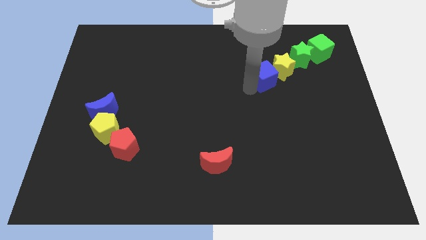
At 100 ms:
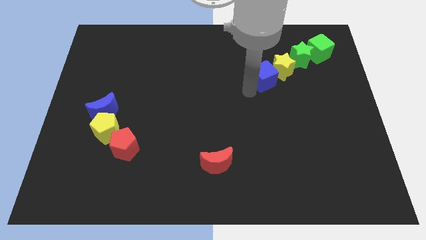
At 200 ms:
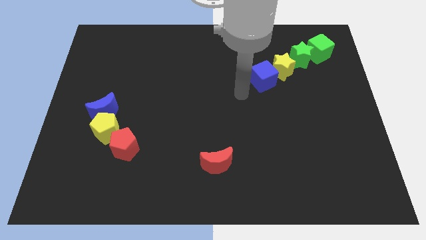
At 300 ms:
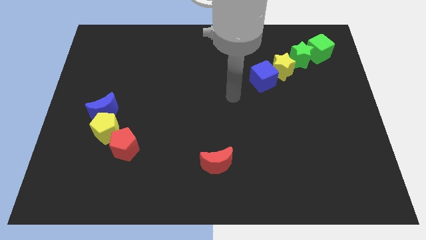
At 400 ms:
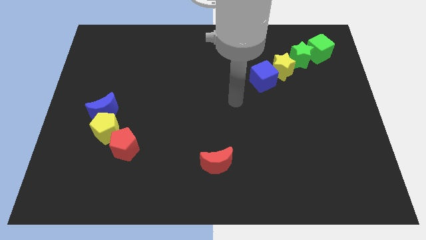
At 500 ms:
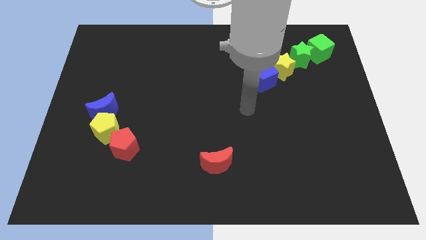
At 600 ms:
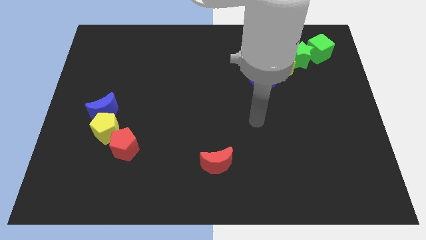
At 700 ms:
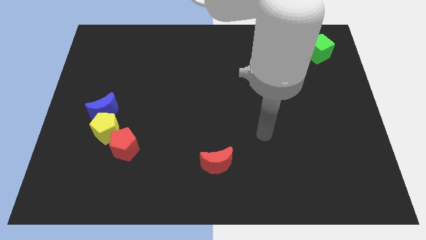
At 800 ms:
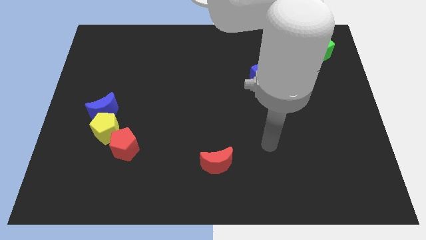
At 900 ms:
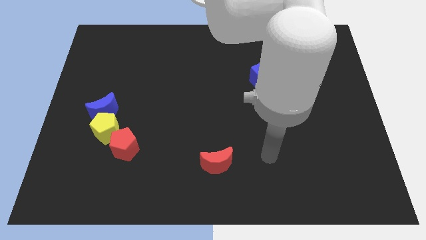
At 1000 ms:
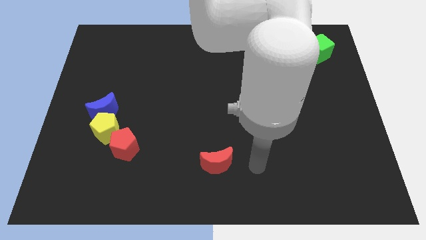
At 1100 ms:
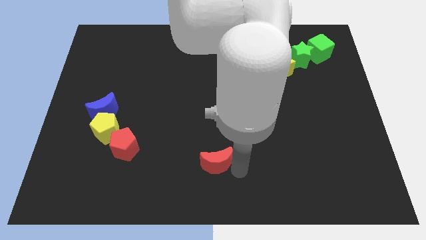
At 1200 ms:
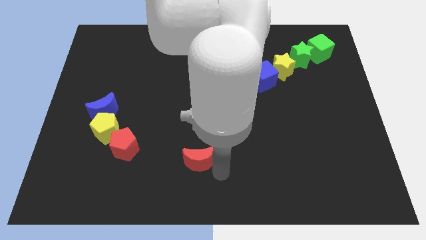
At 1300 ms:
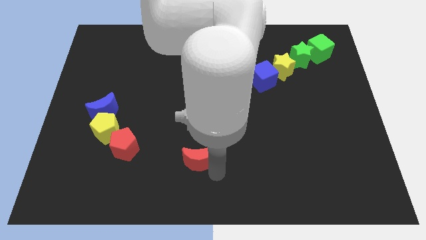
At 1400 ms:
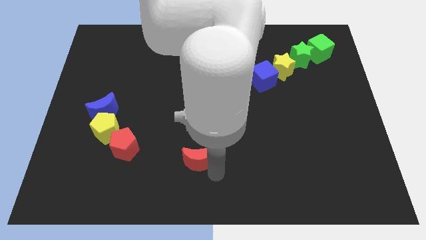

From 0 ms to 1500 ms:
move the arm towards the red crescent

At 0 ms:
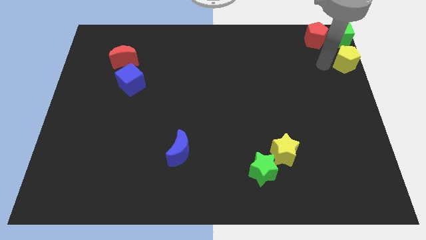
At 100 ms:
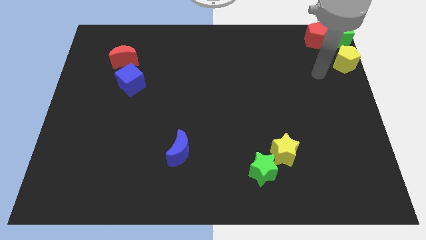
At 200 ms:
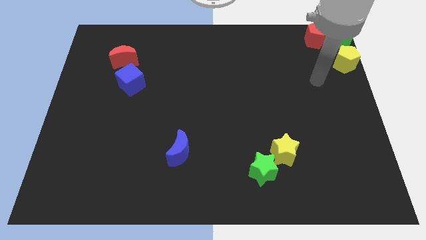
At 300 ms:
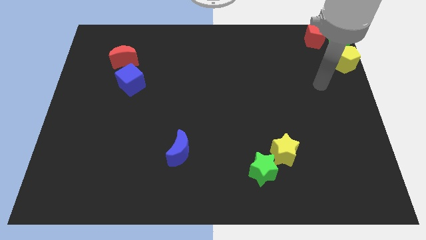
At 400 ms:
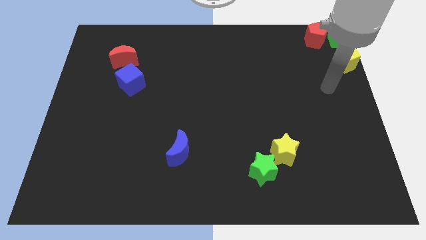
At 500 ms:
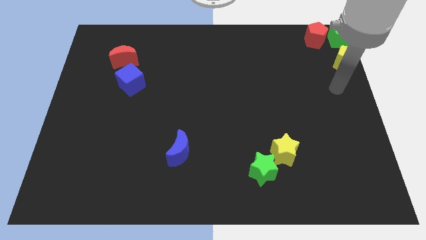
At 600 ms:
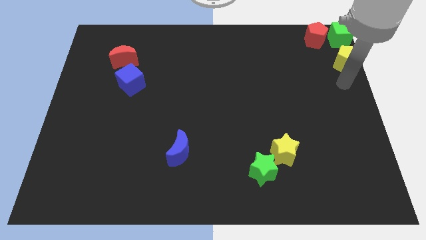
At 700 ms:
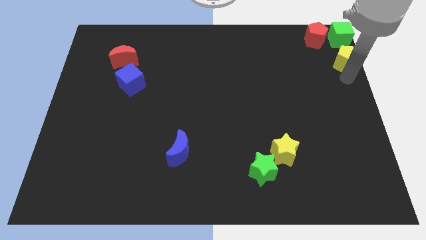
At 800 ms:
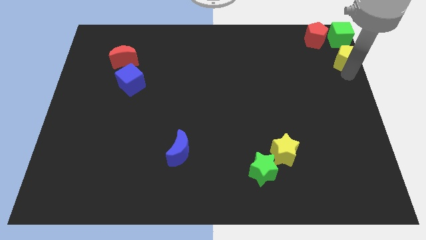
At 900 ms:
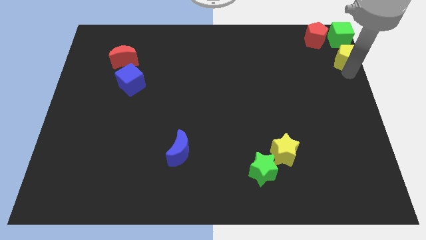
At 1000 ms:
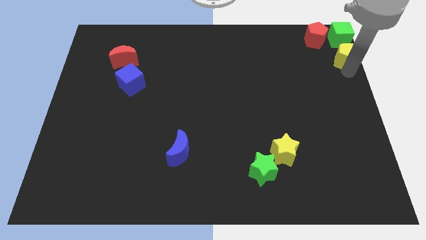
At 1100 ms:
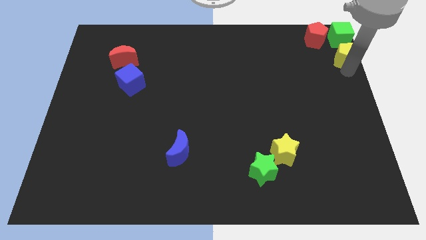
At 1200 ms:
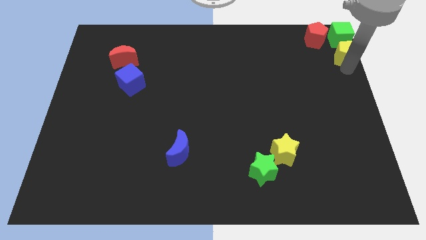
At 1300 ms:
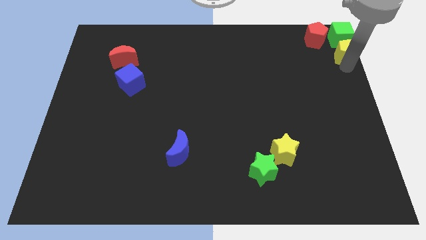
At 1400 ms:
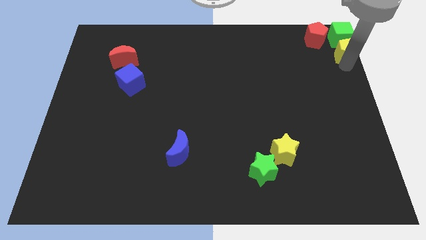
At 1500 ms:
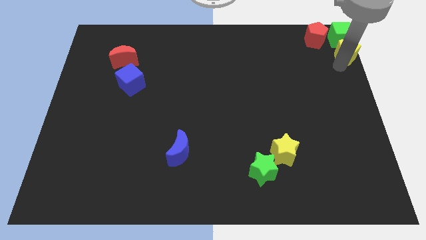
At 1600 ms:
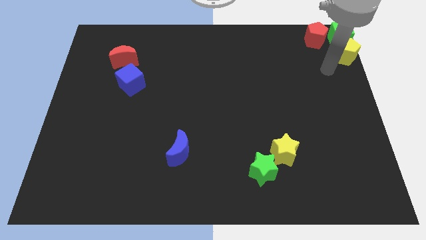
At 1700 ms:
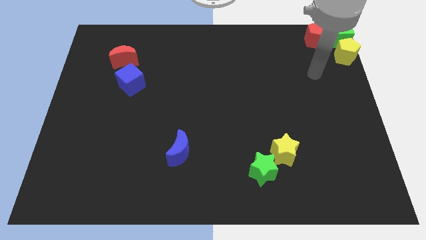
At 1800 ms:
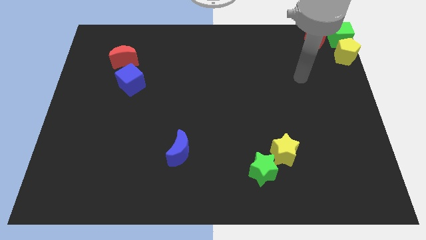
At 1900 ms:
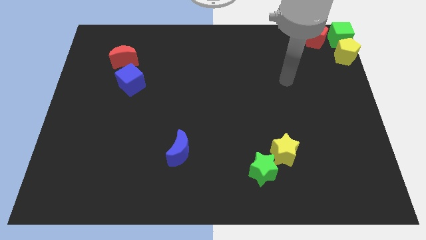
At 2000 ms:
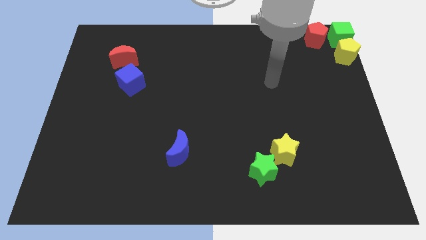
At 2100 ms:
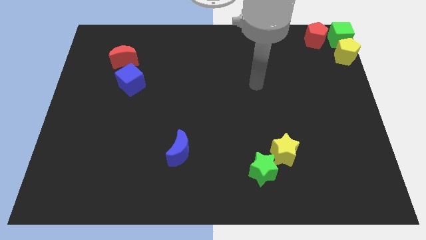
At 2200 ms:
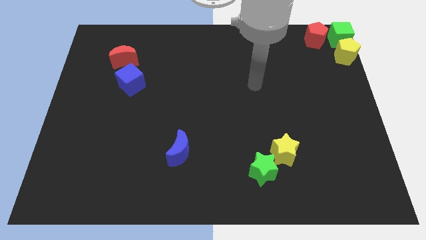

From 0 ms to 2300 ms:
push the yellow block close to the green block

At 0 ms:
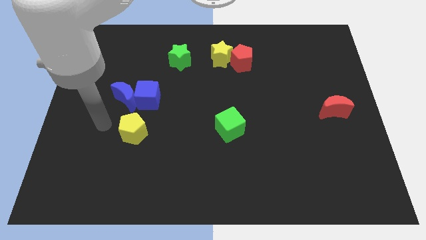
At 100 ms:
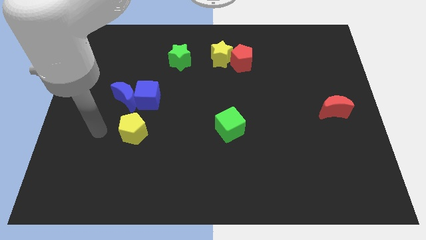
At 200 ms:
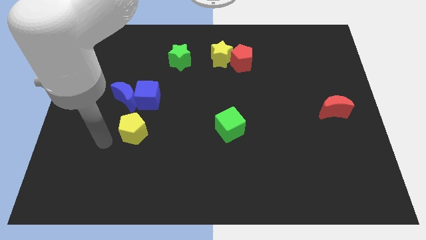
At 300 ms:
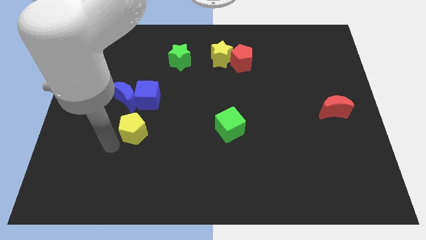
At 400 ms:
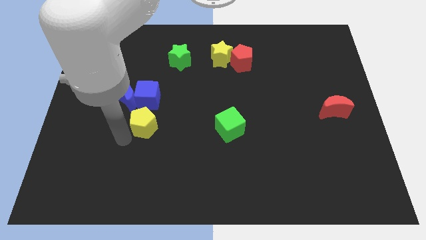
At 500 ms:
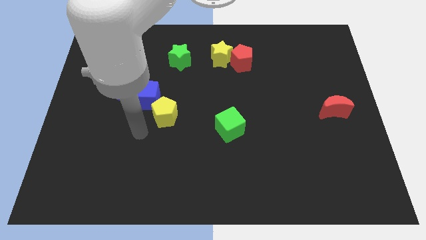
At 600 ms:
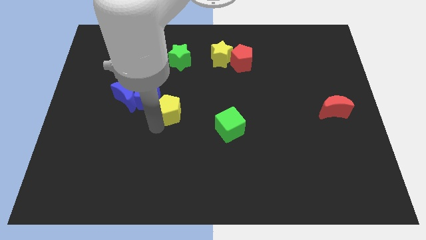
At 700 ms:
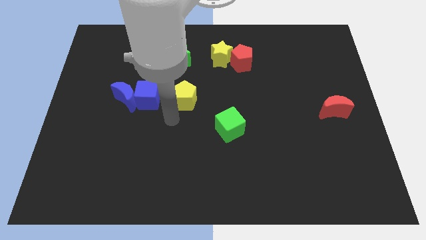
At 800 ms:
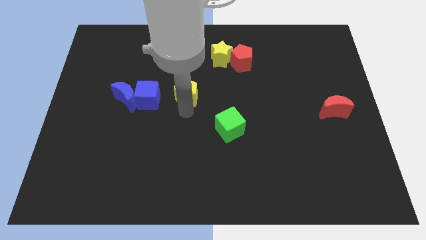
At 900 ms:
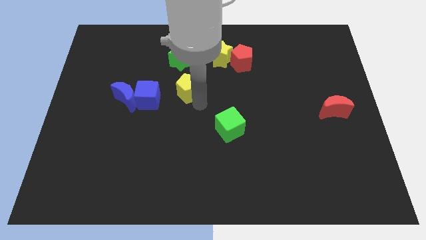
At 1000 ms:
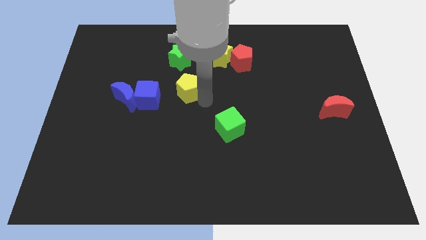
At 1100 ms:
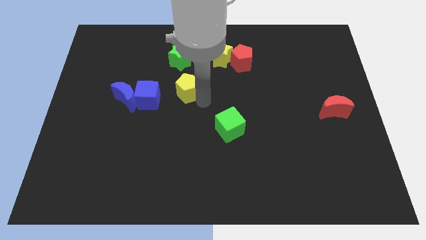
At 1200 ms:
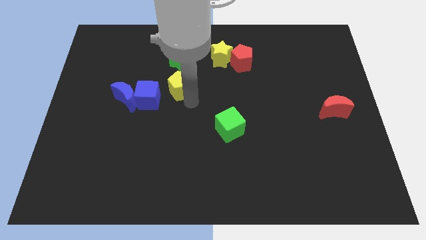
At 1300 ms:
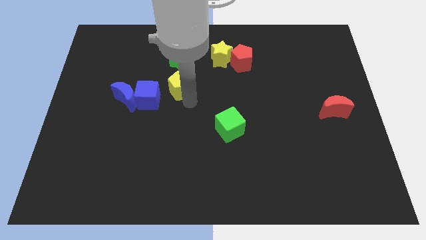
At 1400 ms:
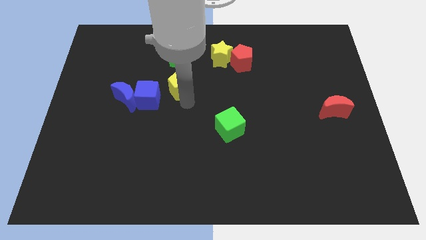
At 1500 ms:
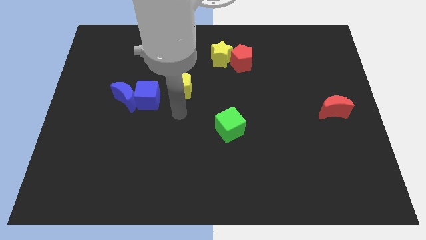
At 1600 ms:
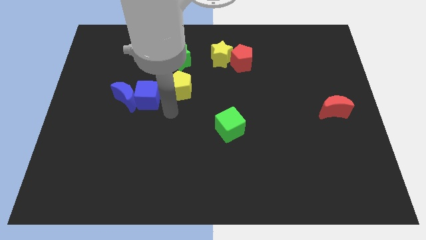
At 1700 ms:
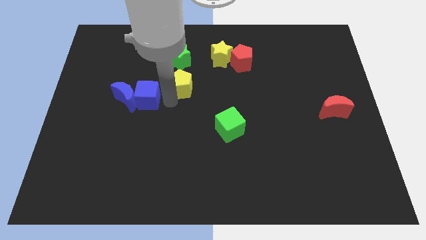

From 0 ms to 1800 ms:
push the yellow pentagon underneath the green star

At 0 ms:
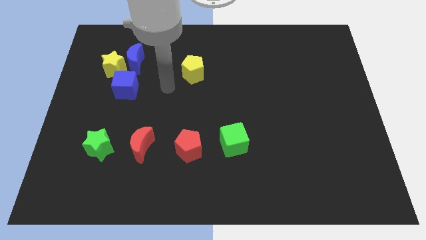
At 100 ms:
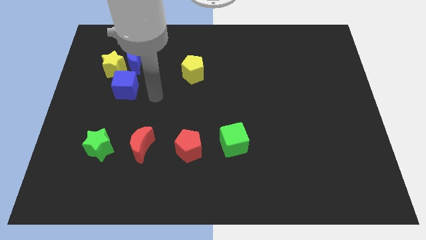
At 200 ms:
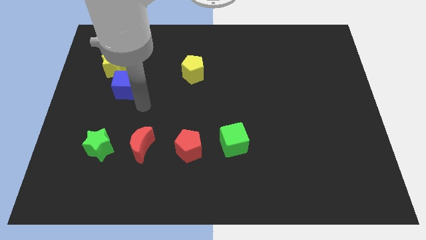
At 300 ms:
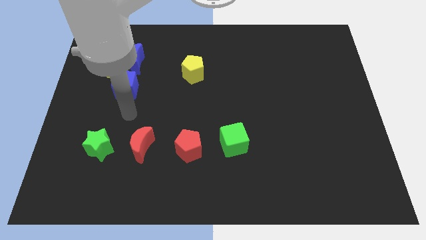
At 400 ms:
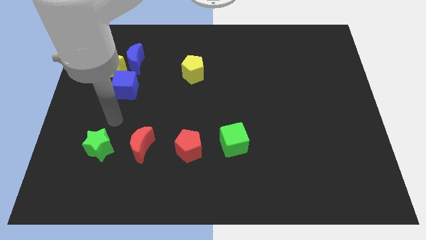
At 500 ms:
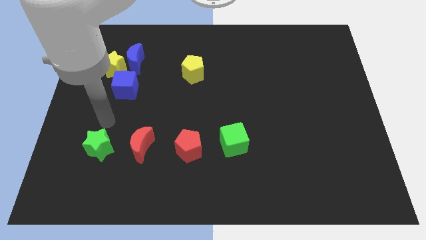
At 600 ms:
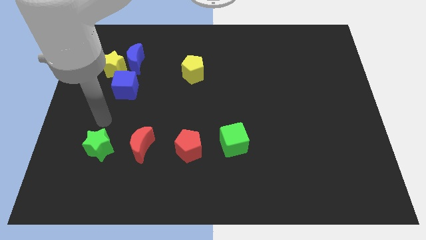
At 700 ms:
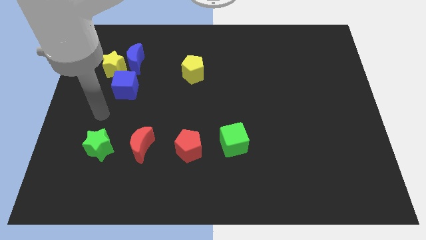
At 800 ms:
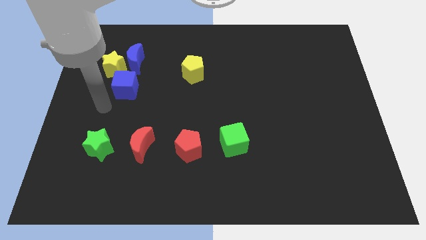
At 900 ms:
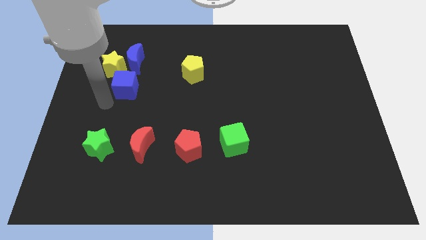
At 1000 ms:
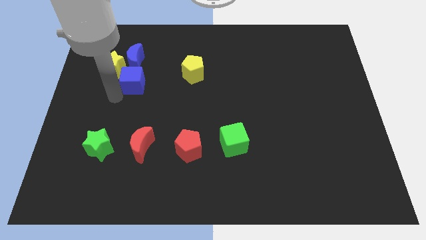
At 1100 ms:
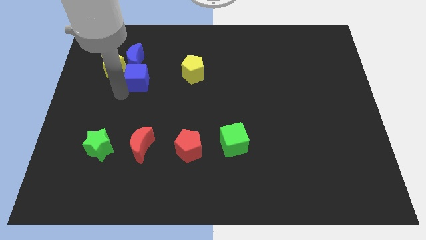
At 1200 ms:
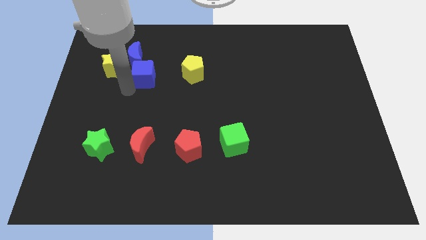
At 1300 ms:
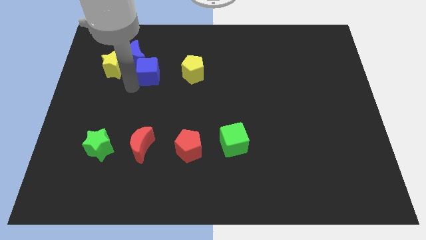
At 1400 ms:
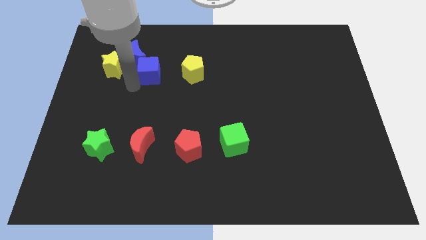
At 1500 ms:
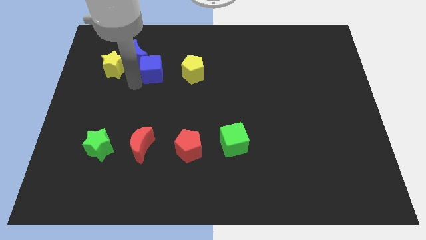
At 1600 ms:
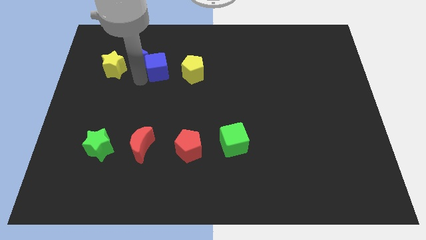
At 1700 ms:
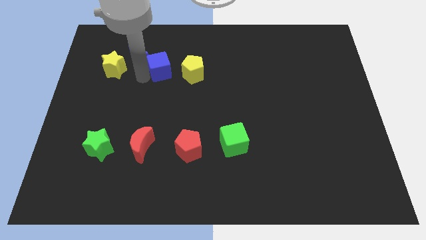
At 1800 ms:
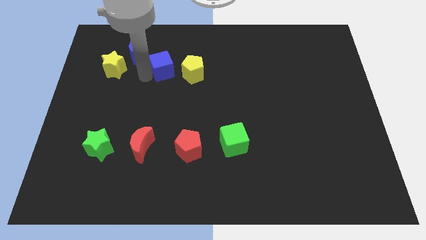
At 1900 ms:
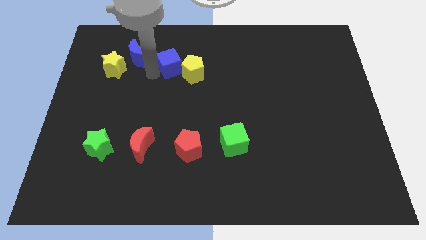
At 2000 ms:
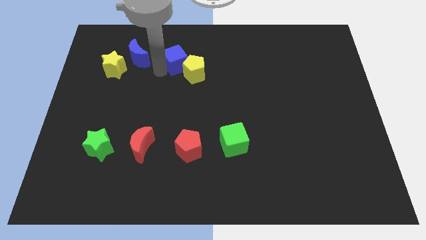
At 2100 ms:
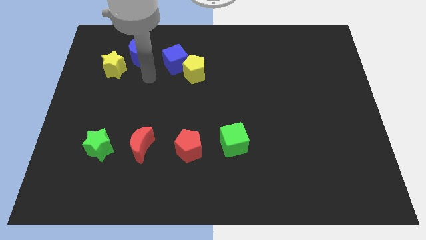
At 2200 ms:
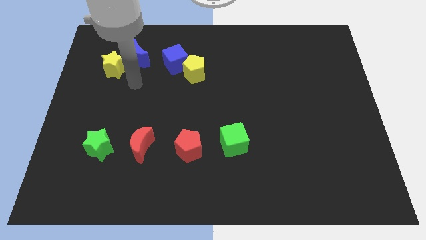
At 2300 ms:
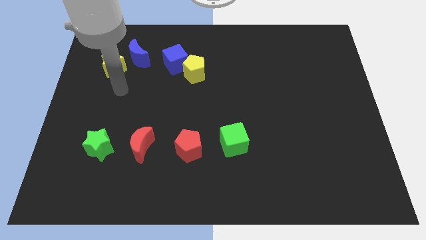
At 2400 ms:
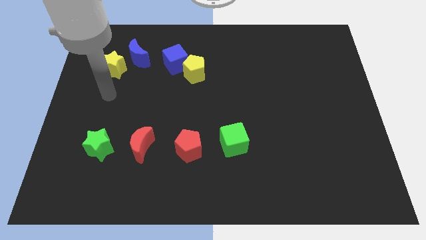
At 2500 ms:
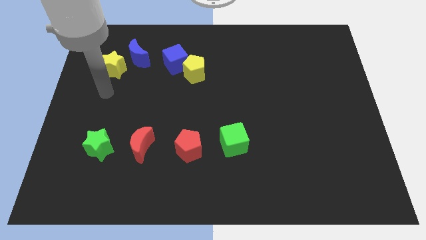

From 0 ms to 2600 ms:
push the blue cube into the yellow pentagon

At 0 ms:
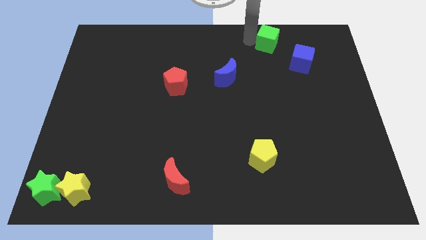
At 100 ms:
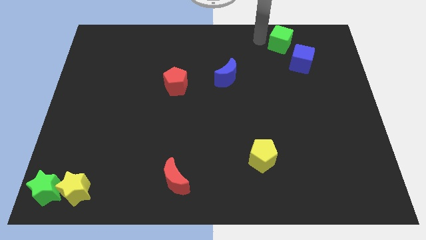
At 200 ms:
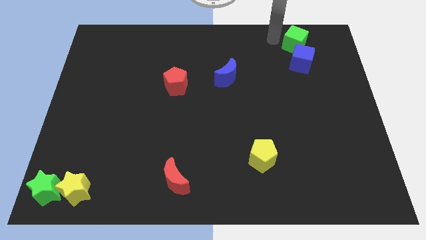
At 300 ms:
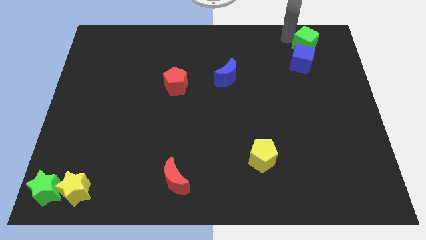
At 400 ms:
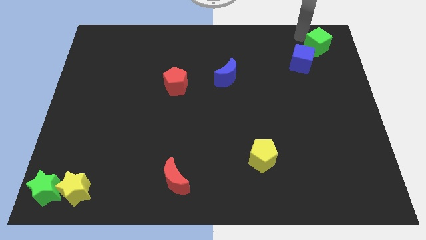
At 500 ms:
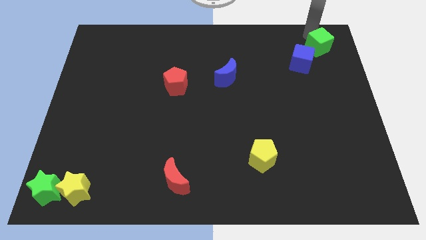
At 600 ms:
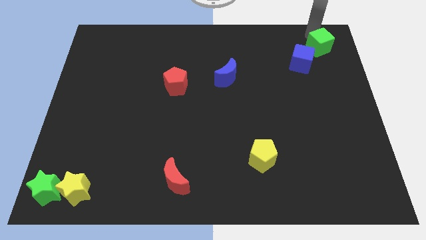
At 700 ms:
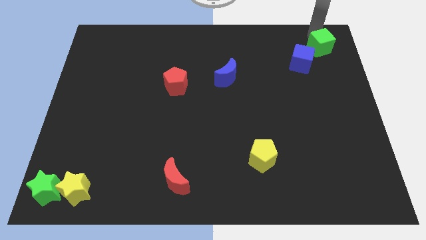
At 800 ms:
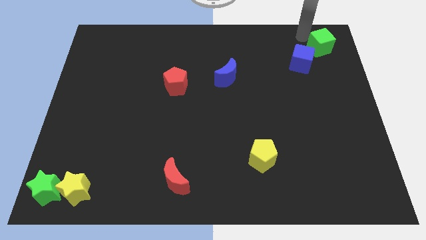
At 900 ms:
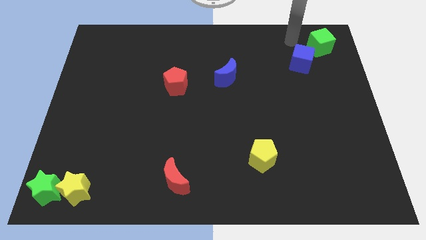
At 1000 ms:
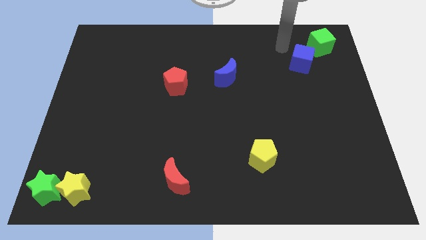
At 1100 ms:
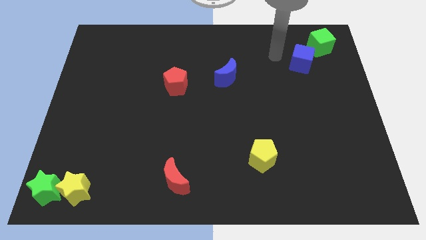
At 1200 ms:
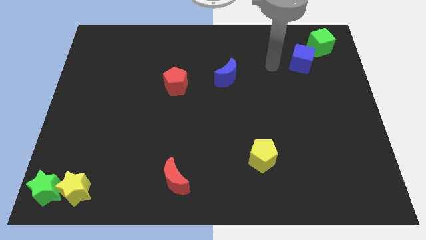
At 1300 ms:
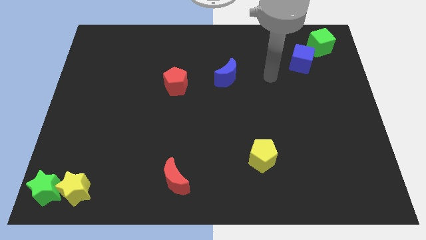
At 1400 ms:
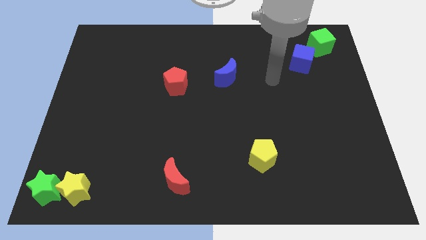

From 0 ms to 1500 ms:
put the green cube at the top right side of the blue cube
